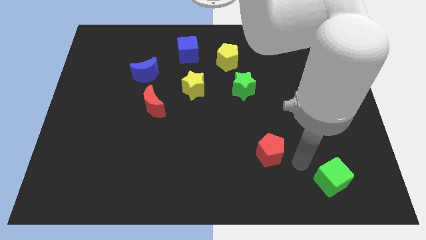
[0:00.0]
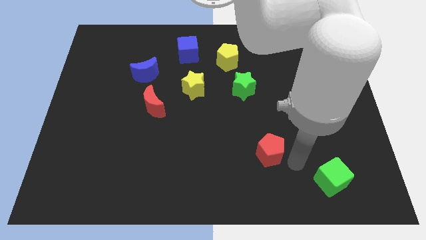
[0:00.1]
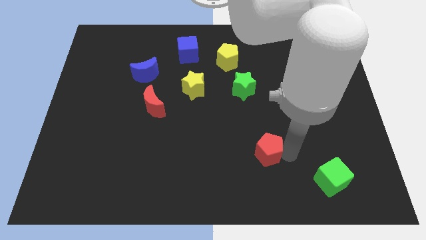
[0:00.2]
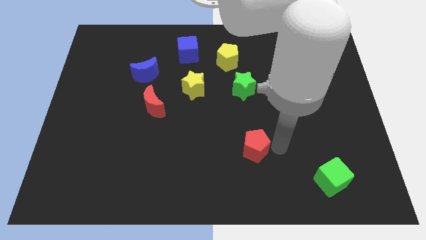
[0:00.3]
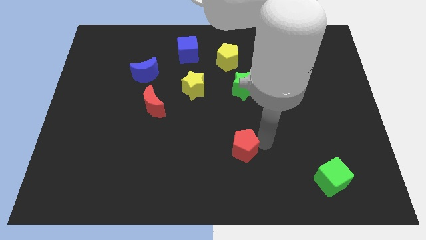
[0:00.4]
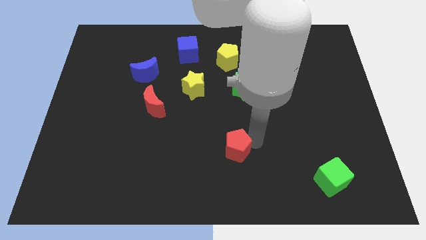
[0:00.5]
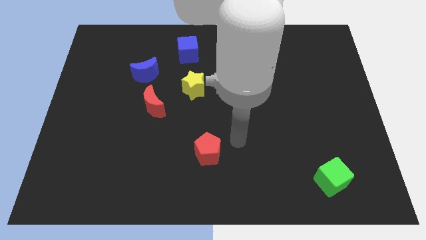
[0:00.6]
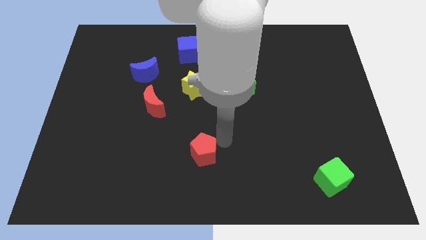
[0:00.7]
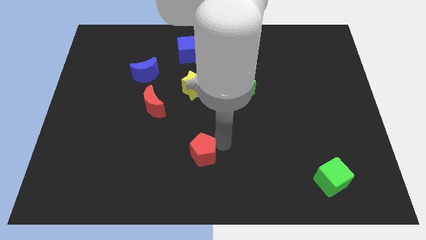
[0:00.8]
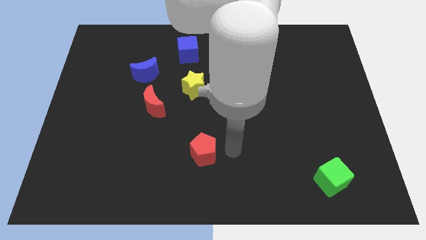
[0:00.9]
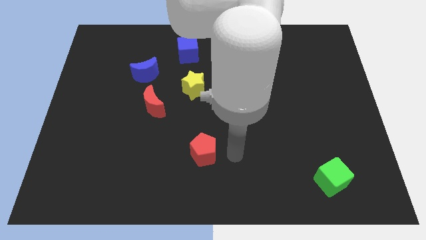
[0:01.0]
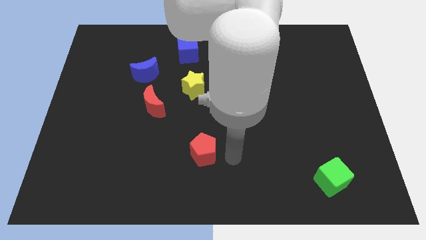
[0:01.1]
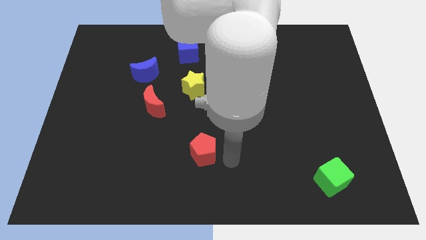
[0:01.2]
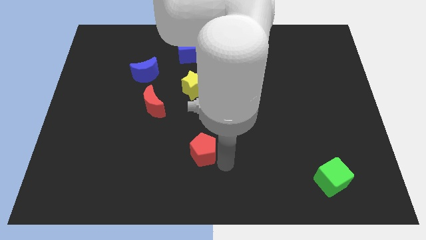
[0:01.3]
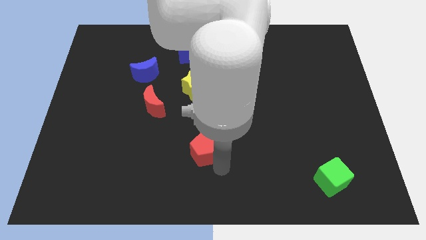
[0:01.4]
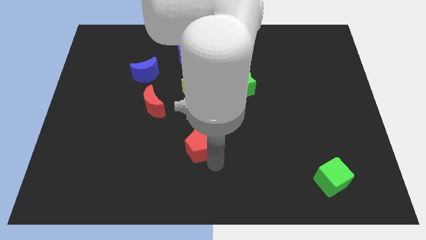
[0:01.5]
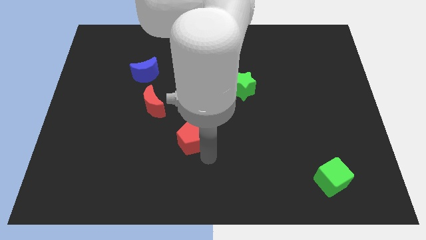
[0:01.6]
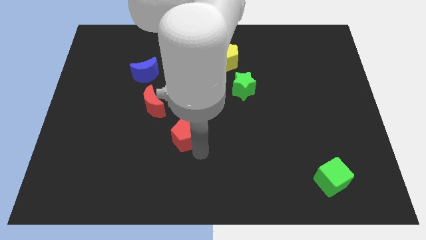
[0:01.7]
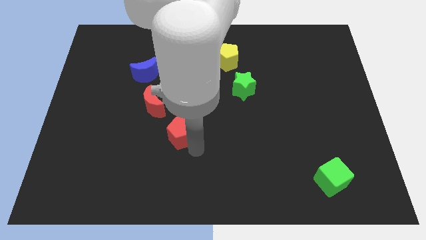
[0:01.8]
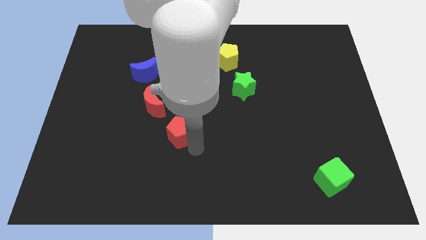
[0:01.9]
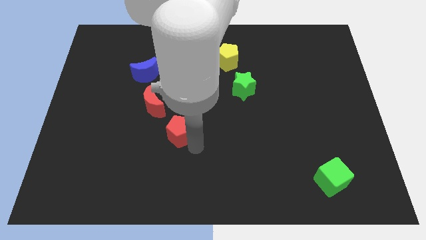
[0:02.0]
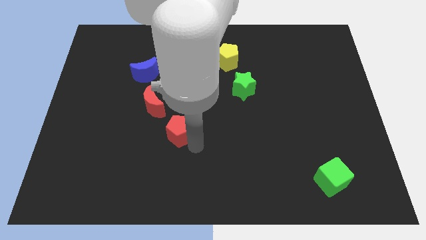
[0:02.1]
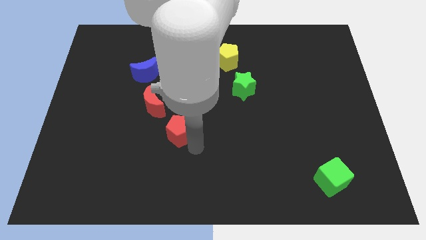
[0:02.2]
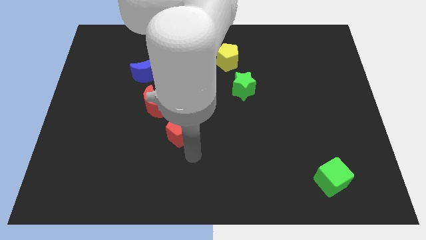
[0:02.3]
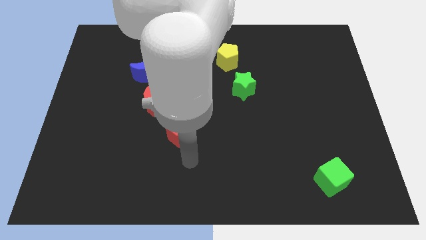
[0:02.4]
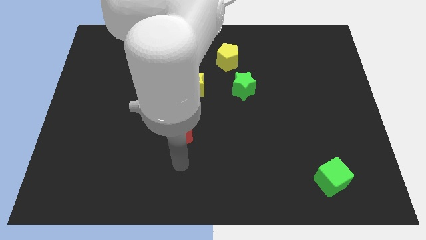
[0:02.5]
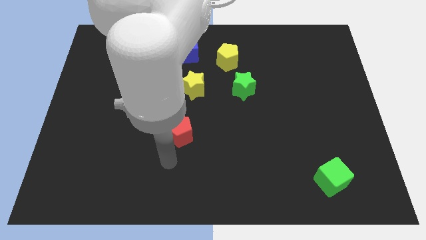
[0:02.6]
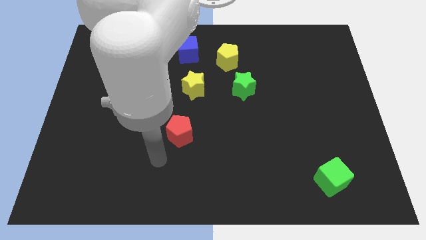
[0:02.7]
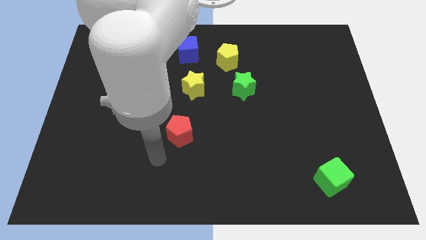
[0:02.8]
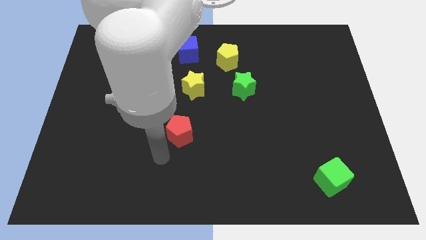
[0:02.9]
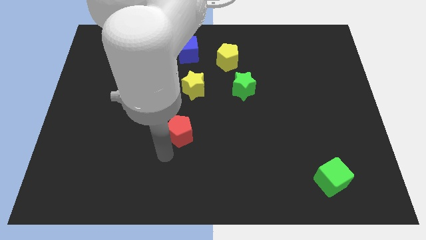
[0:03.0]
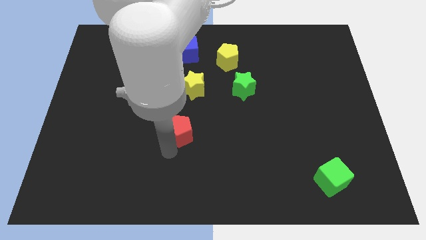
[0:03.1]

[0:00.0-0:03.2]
move the red pentagon into the group of blocks

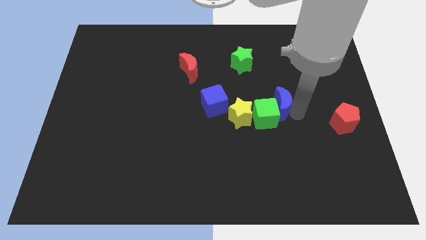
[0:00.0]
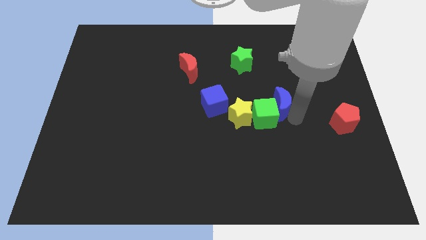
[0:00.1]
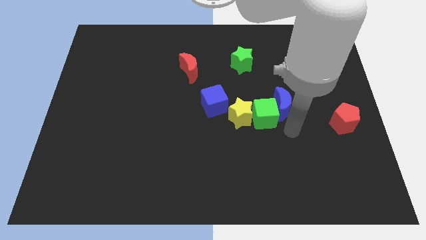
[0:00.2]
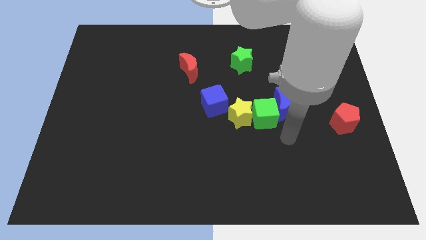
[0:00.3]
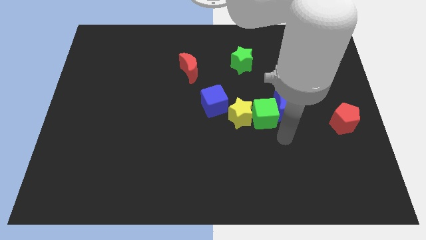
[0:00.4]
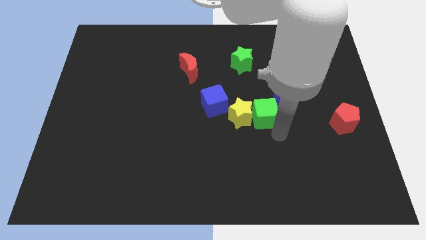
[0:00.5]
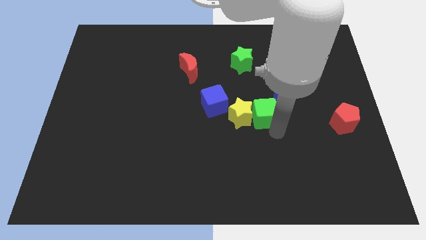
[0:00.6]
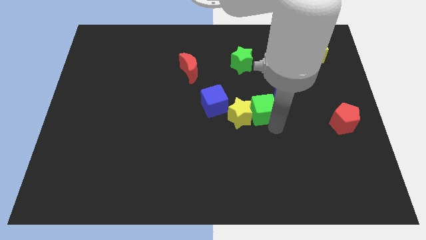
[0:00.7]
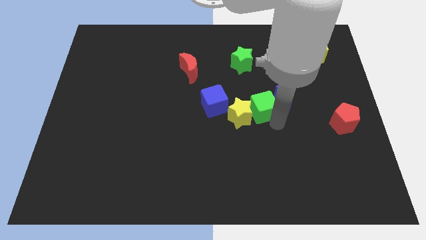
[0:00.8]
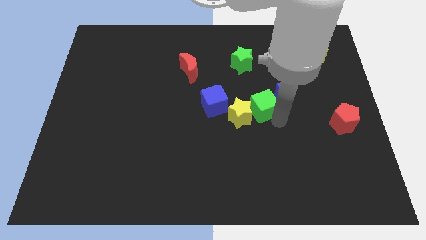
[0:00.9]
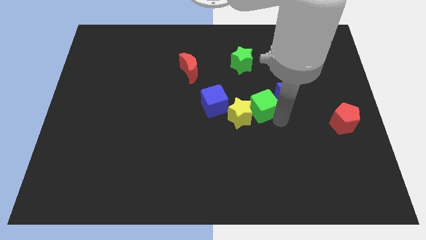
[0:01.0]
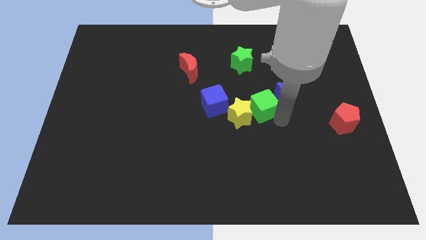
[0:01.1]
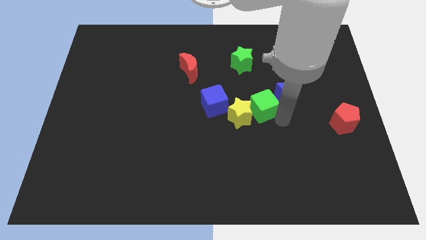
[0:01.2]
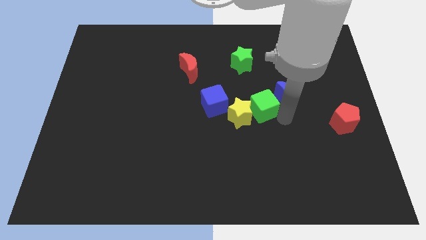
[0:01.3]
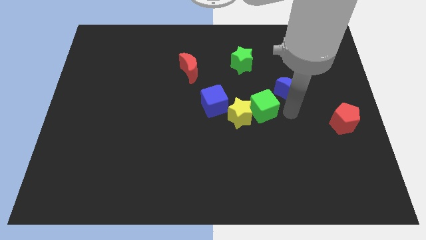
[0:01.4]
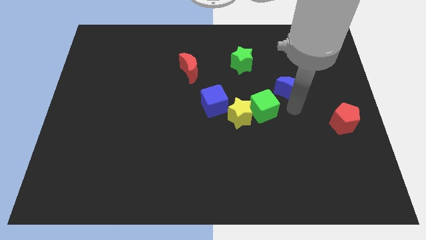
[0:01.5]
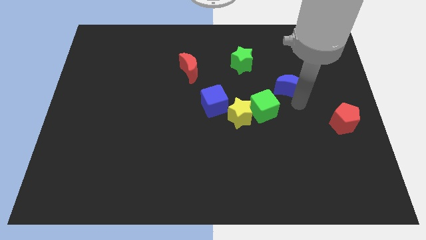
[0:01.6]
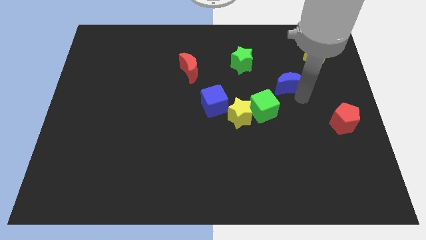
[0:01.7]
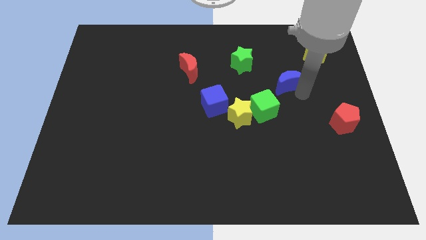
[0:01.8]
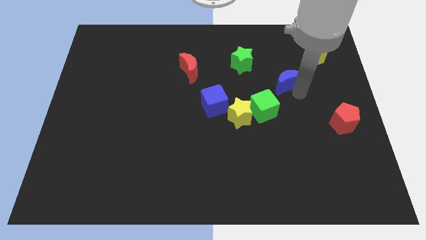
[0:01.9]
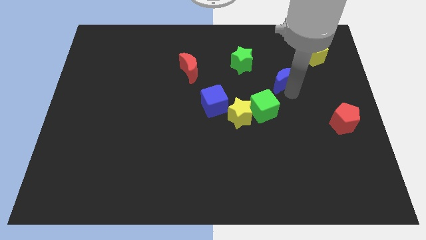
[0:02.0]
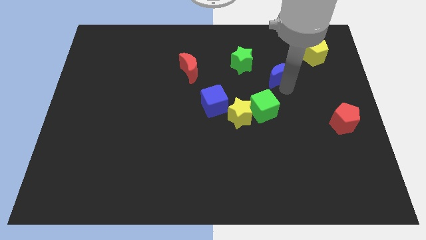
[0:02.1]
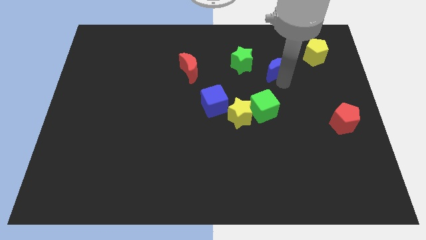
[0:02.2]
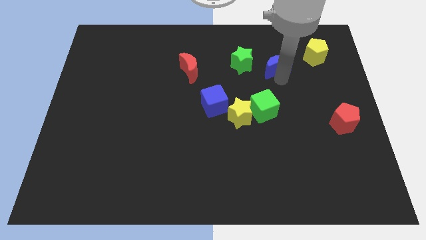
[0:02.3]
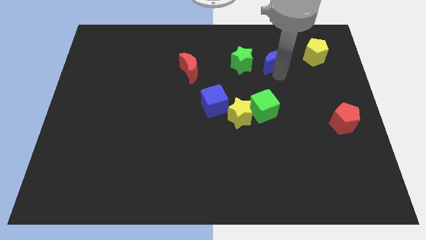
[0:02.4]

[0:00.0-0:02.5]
place the blue moon right to the green star

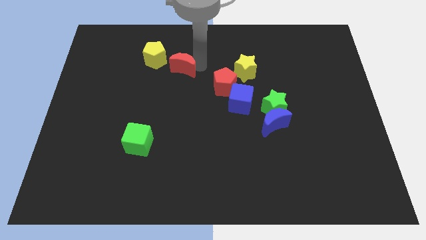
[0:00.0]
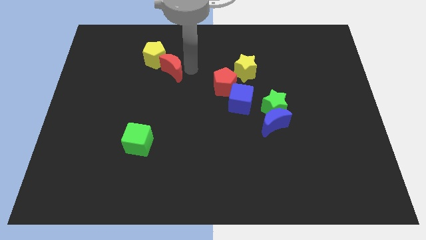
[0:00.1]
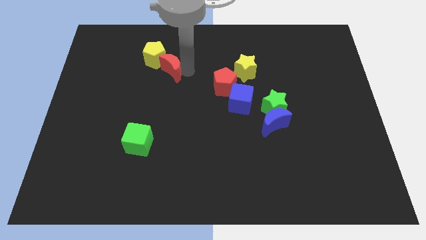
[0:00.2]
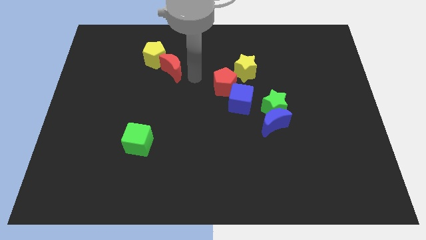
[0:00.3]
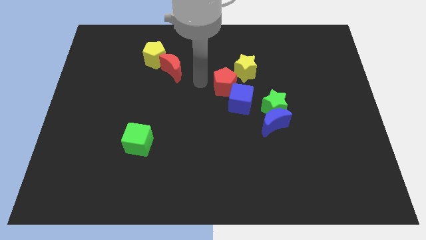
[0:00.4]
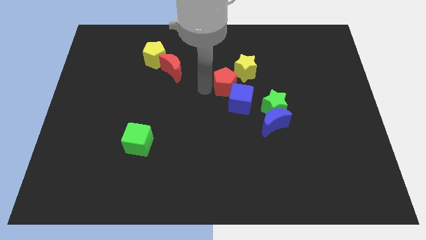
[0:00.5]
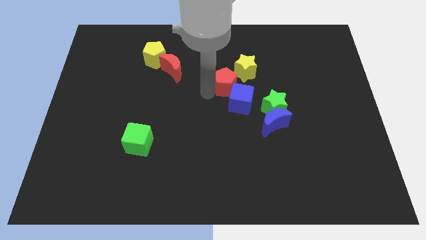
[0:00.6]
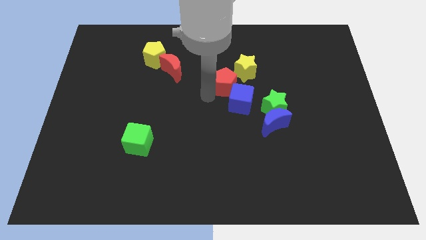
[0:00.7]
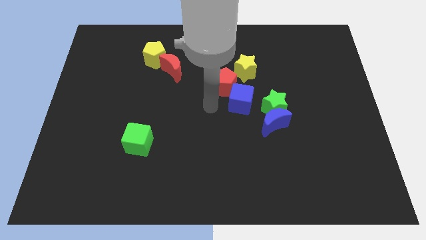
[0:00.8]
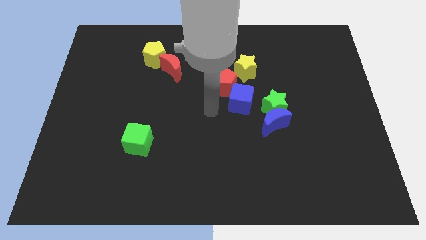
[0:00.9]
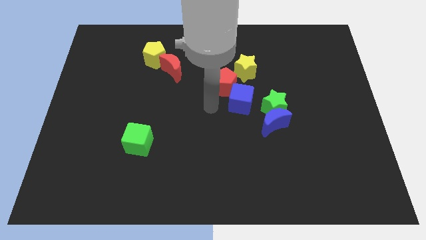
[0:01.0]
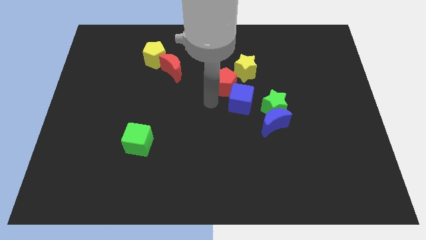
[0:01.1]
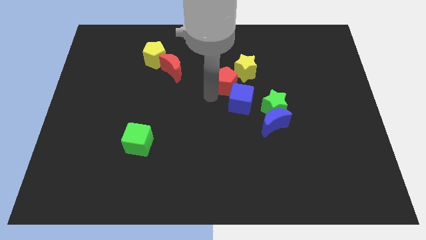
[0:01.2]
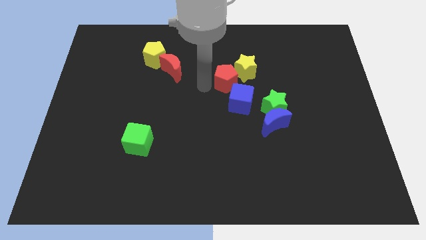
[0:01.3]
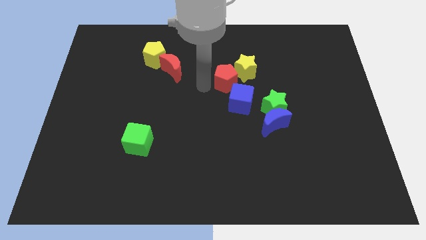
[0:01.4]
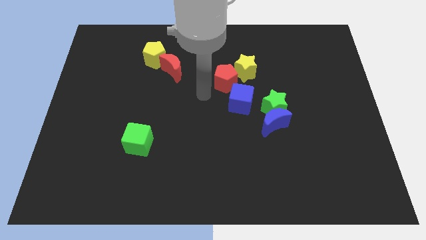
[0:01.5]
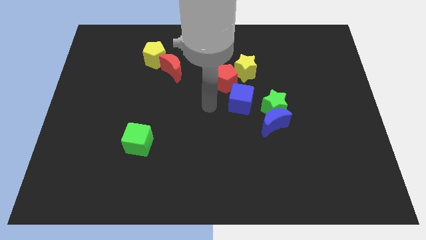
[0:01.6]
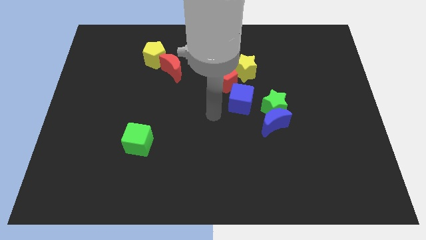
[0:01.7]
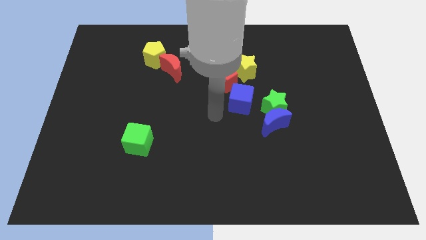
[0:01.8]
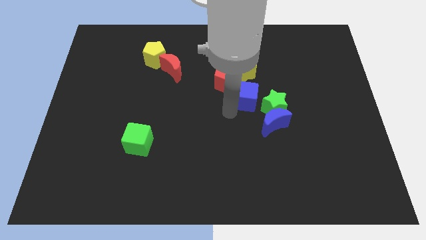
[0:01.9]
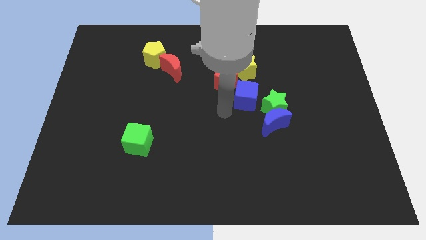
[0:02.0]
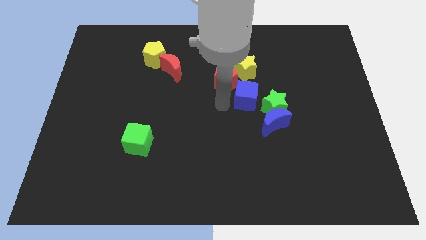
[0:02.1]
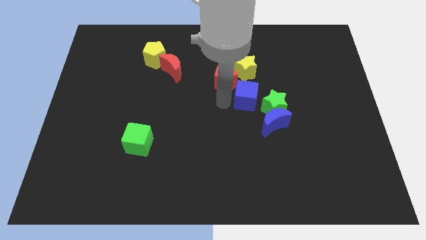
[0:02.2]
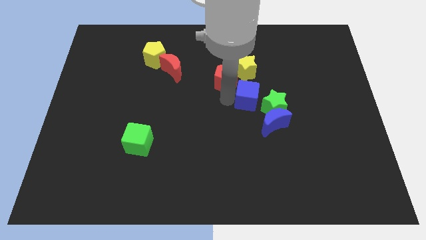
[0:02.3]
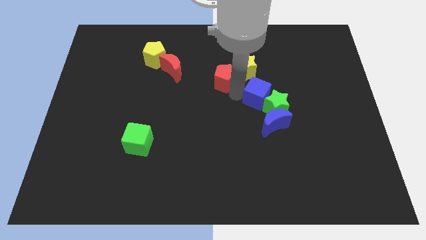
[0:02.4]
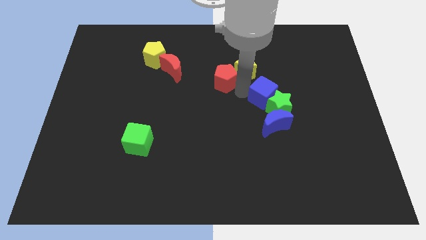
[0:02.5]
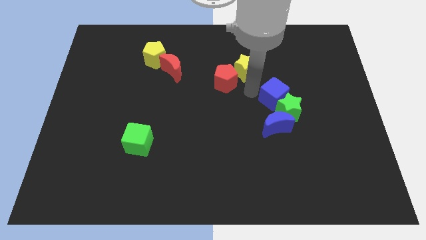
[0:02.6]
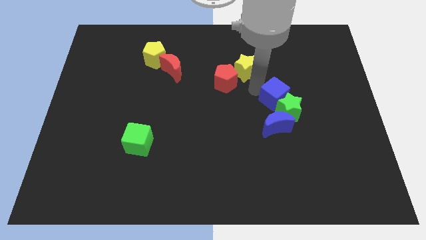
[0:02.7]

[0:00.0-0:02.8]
move the blue cube to the left above the green star
